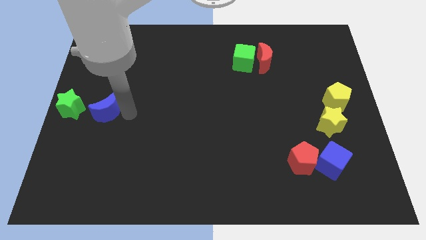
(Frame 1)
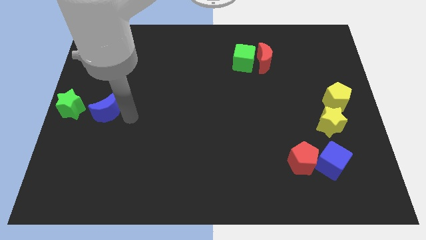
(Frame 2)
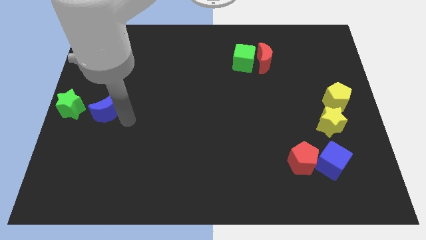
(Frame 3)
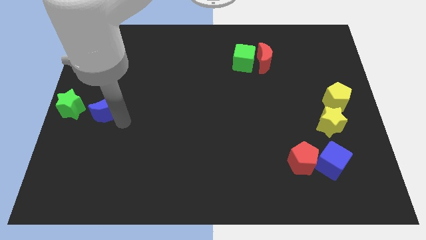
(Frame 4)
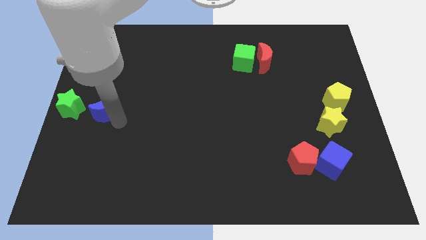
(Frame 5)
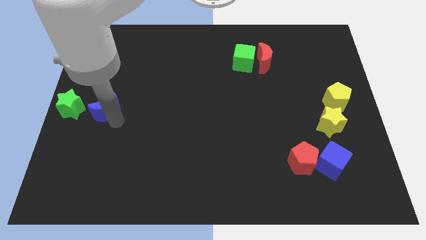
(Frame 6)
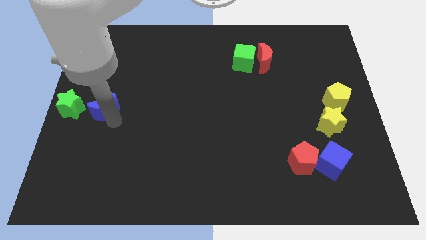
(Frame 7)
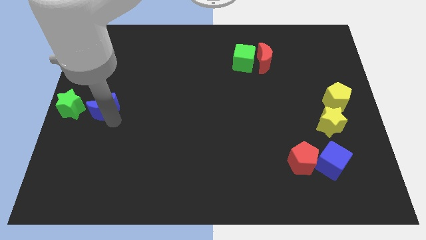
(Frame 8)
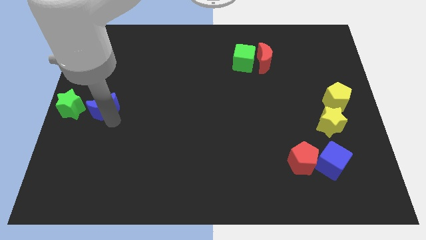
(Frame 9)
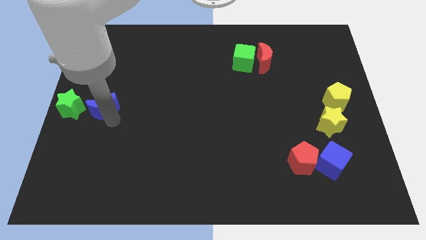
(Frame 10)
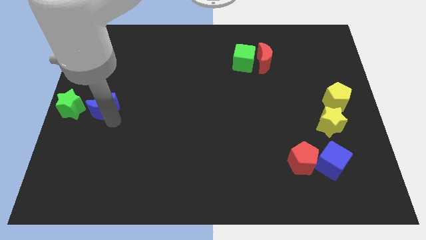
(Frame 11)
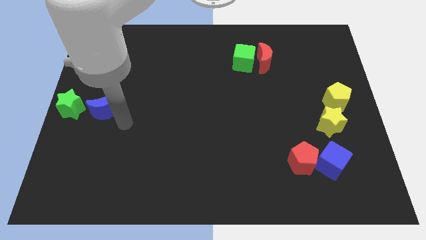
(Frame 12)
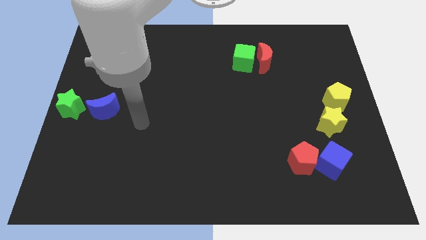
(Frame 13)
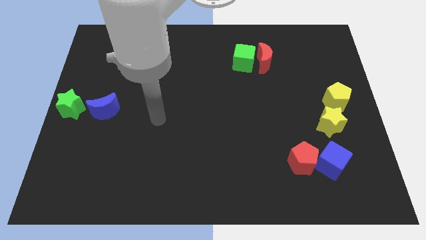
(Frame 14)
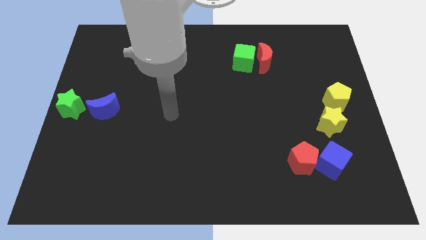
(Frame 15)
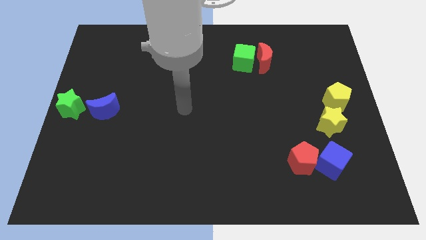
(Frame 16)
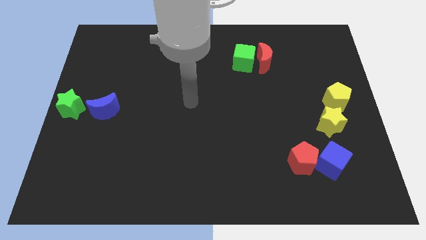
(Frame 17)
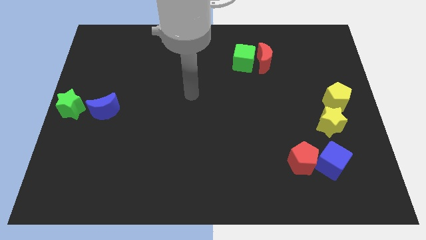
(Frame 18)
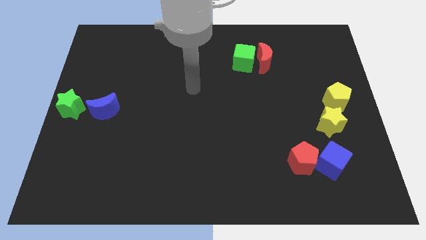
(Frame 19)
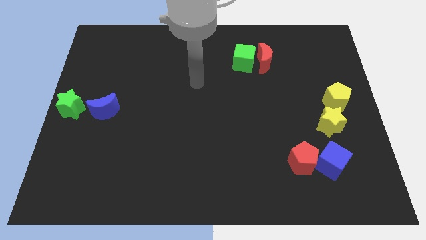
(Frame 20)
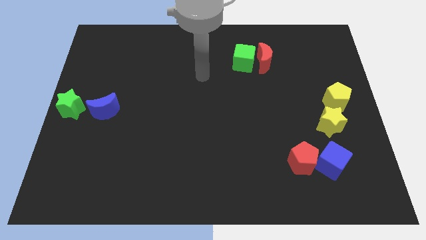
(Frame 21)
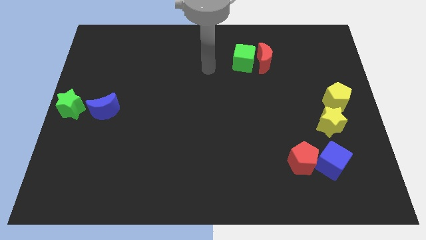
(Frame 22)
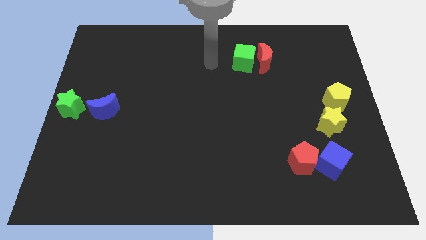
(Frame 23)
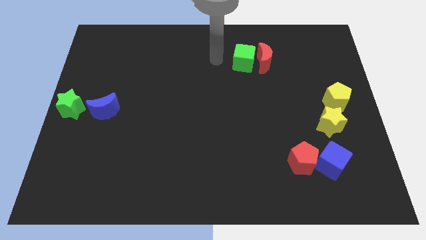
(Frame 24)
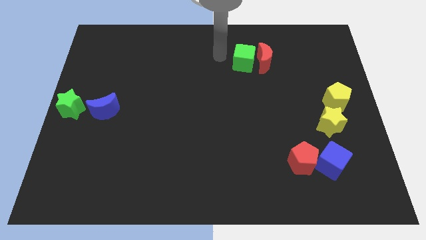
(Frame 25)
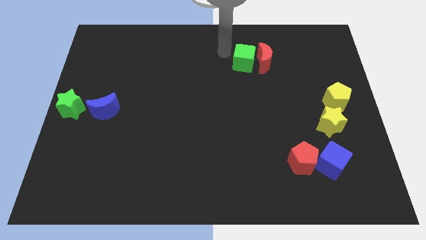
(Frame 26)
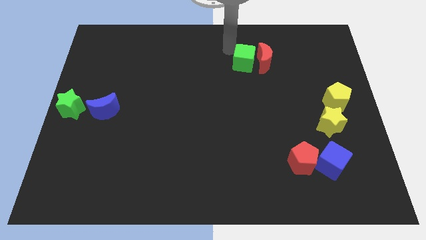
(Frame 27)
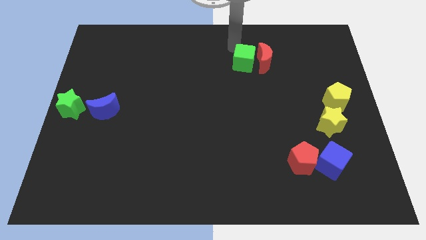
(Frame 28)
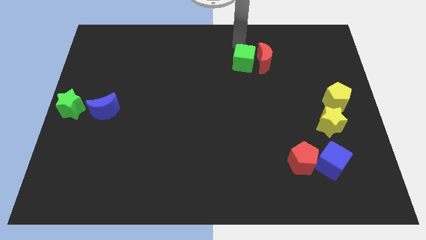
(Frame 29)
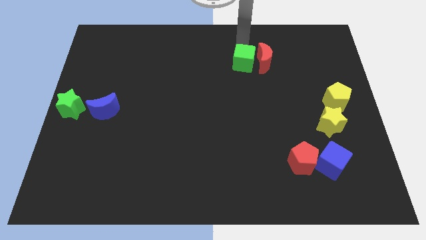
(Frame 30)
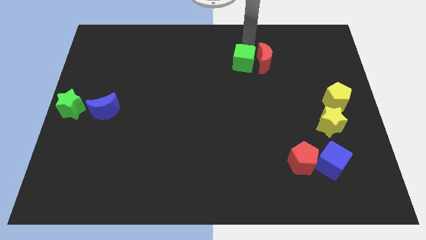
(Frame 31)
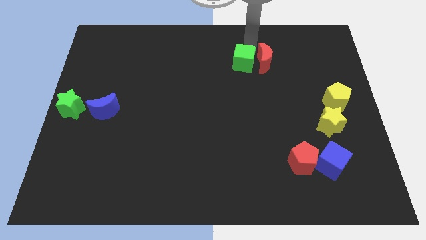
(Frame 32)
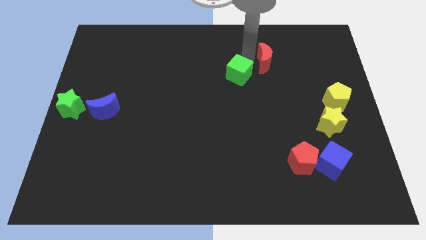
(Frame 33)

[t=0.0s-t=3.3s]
place the arm above the green cube

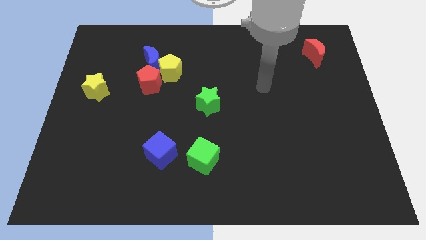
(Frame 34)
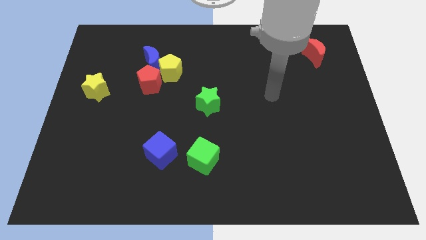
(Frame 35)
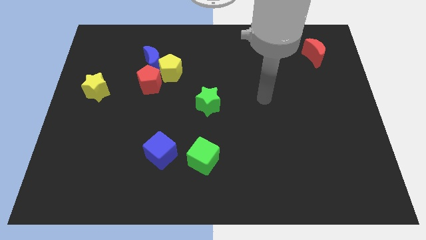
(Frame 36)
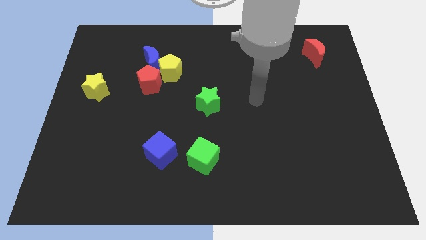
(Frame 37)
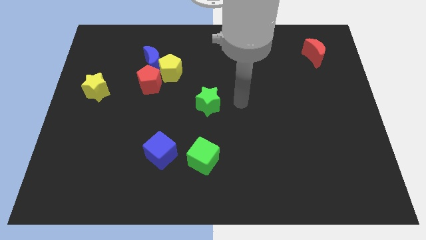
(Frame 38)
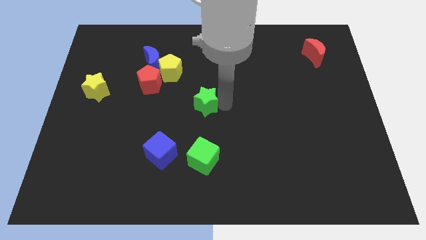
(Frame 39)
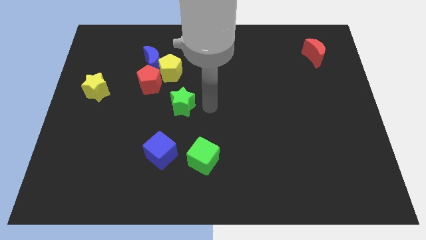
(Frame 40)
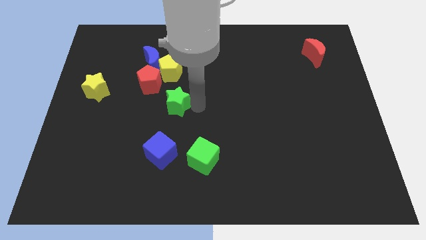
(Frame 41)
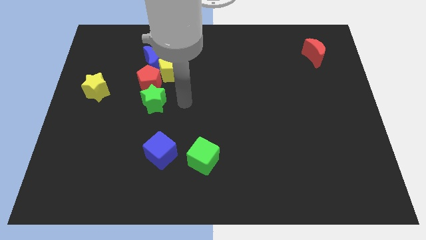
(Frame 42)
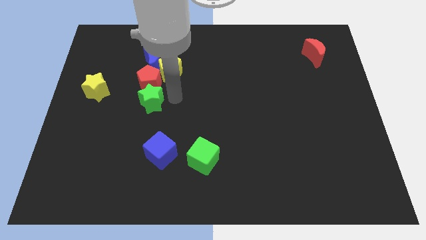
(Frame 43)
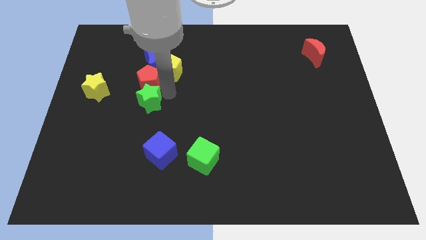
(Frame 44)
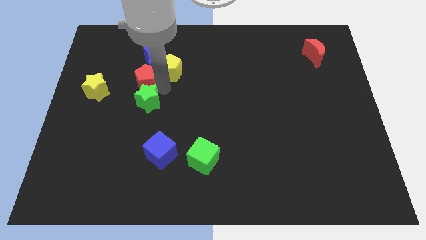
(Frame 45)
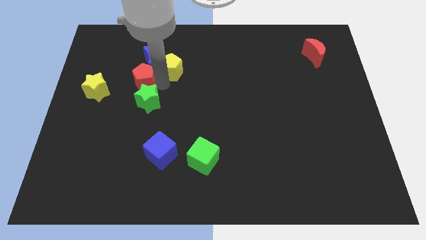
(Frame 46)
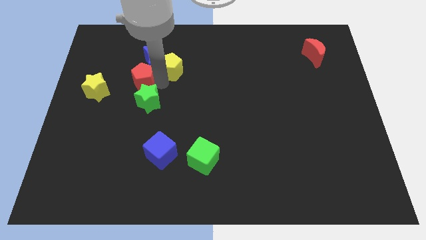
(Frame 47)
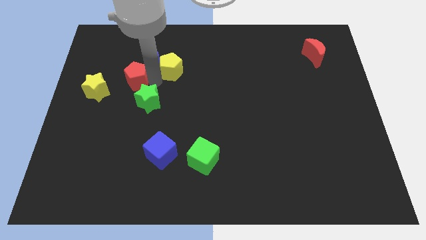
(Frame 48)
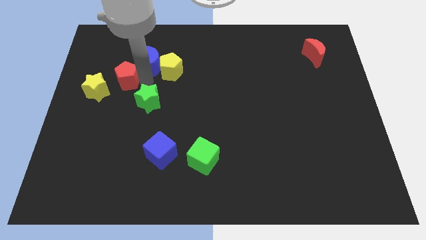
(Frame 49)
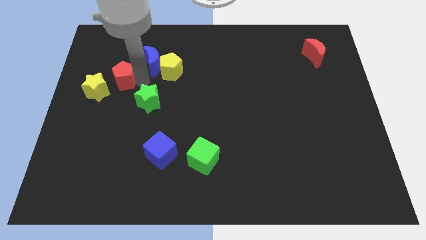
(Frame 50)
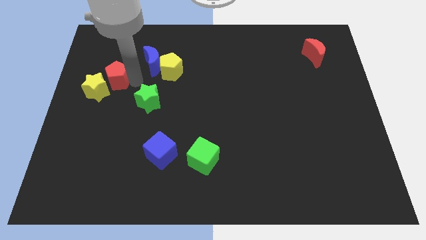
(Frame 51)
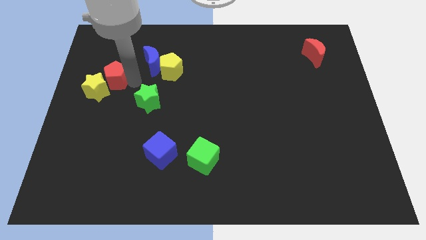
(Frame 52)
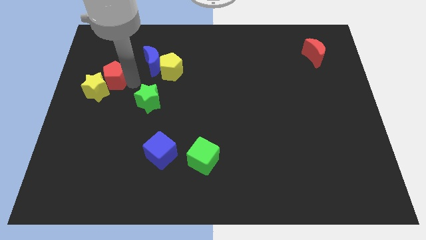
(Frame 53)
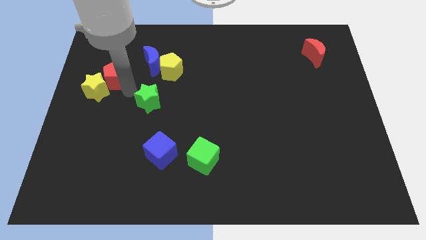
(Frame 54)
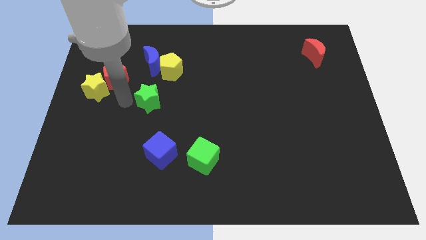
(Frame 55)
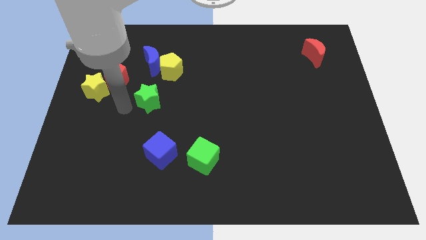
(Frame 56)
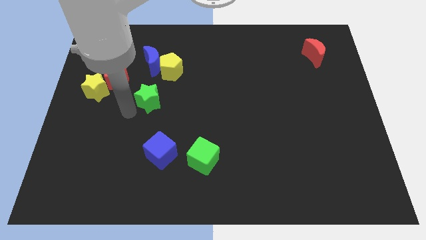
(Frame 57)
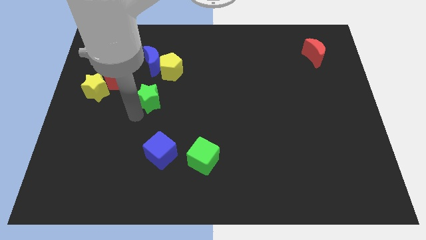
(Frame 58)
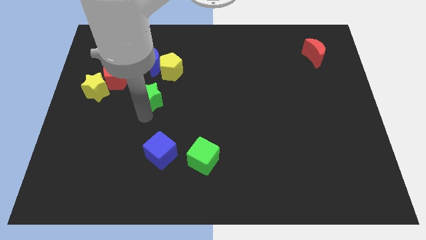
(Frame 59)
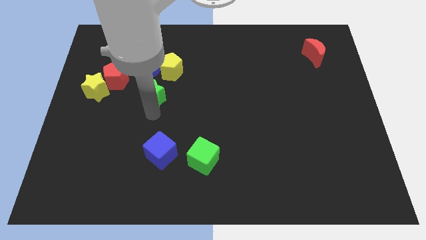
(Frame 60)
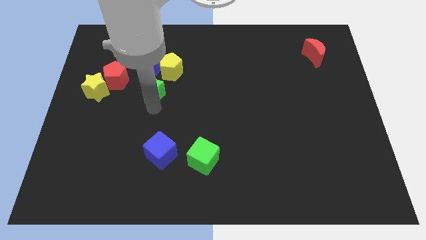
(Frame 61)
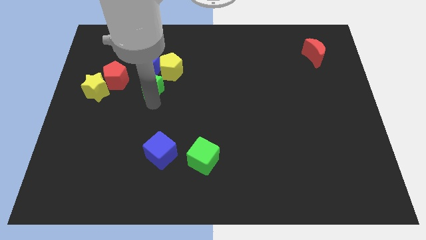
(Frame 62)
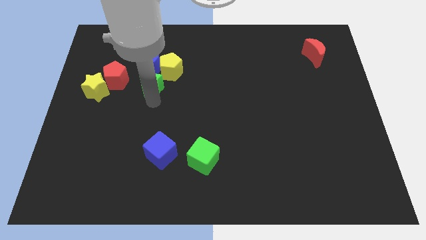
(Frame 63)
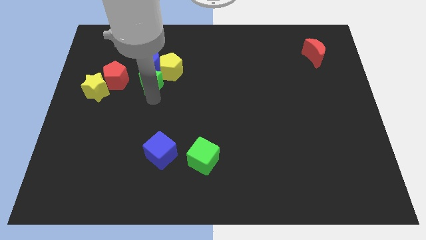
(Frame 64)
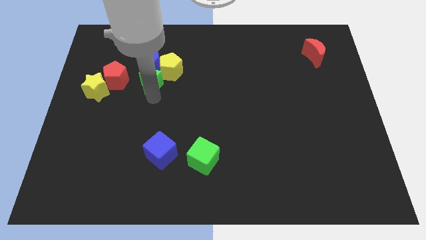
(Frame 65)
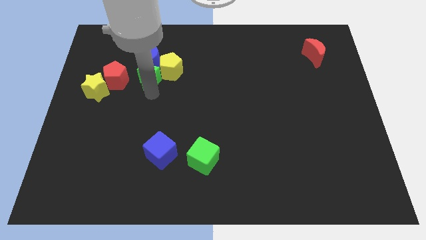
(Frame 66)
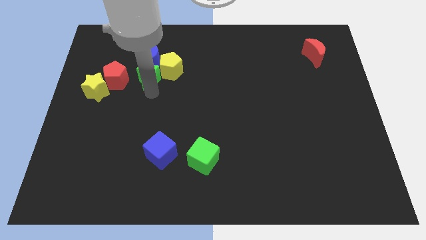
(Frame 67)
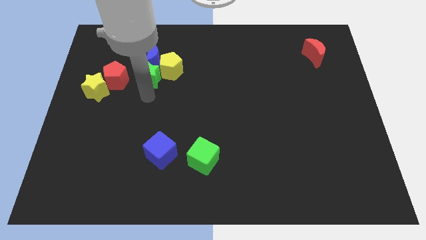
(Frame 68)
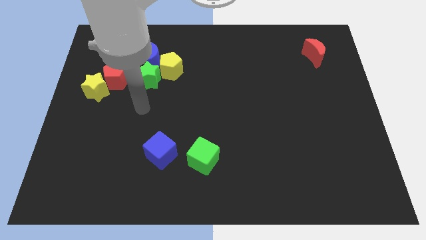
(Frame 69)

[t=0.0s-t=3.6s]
move the green star into the group of blocks

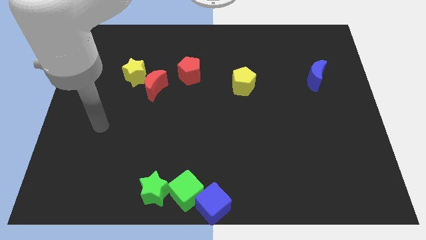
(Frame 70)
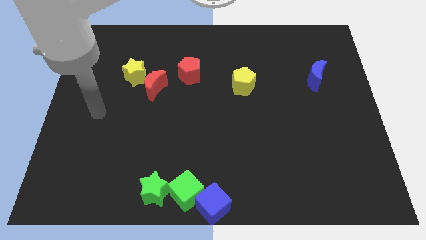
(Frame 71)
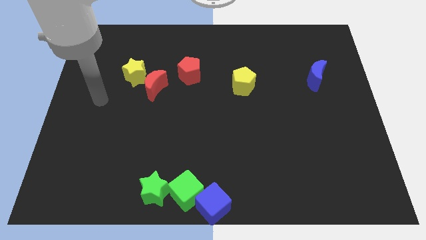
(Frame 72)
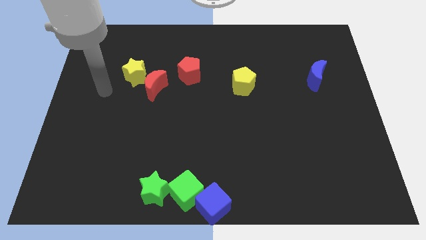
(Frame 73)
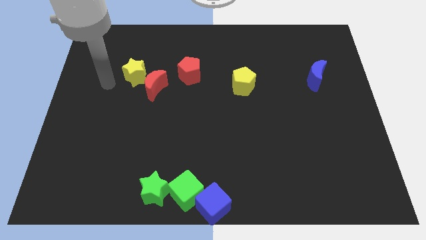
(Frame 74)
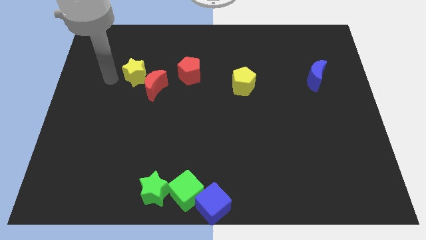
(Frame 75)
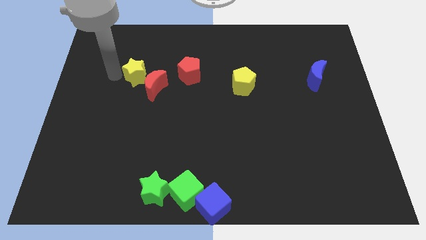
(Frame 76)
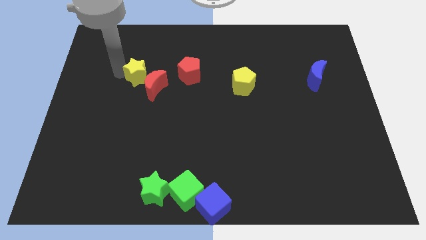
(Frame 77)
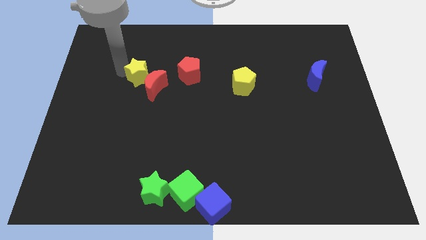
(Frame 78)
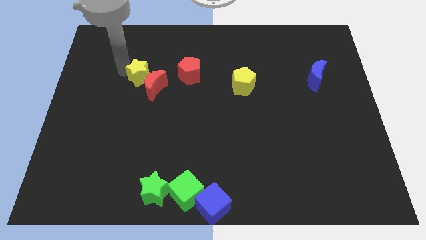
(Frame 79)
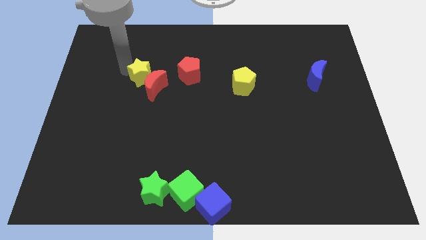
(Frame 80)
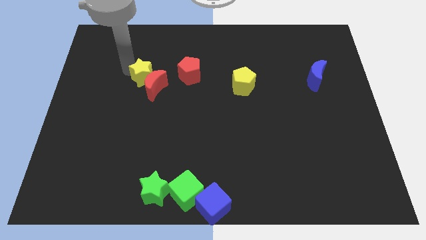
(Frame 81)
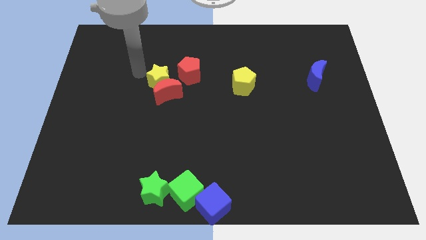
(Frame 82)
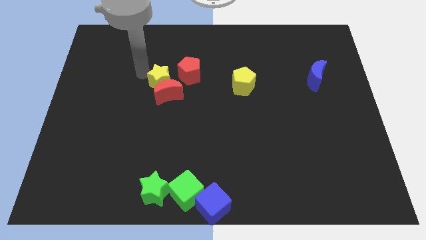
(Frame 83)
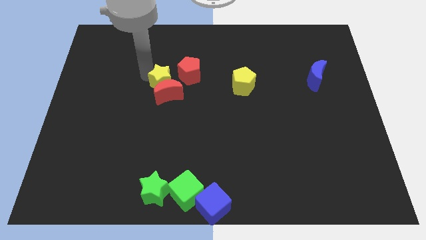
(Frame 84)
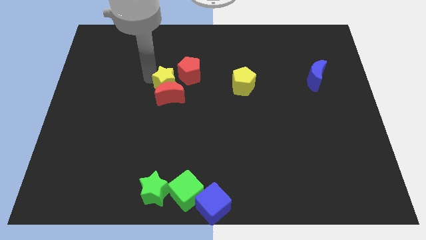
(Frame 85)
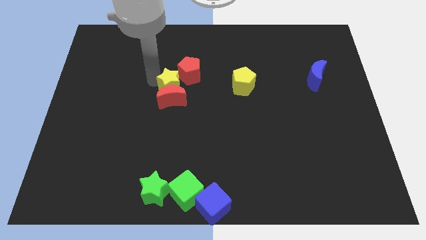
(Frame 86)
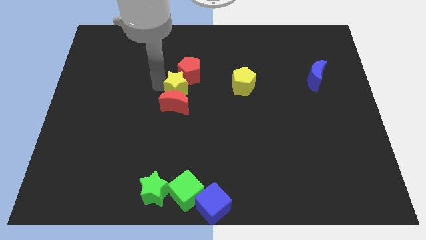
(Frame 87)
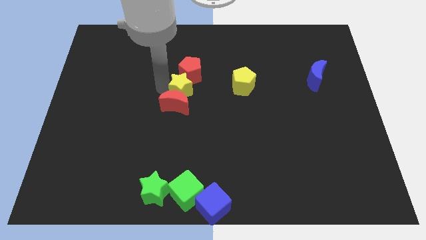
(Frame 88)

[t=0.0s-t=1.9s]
place the yellow star in between the red pentagon and red crescent

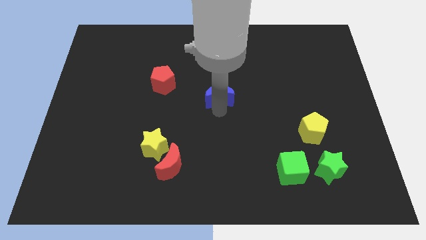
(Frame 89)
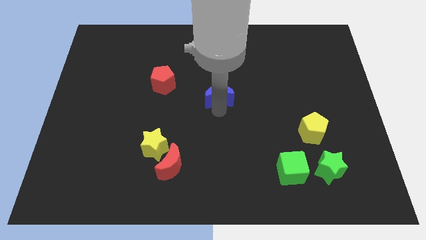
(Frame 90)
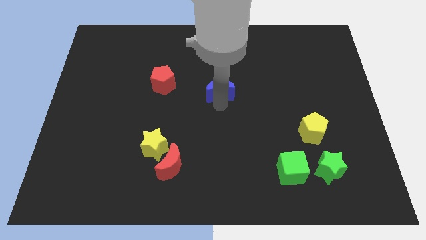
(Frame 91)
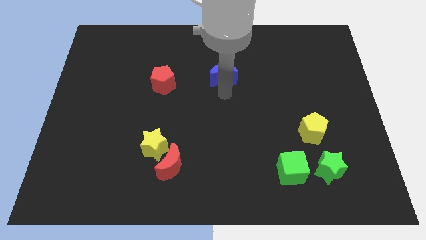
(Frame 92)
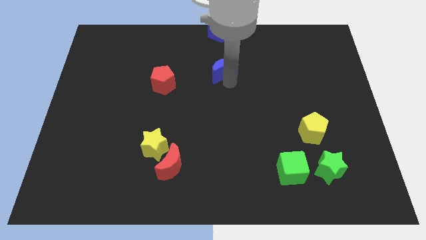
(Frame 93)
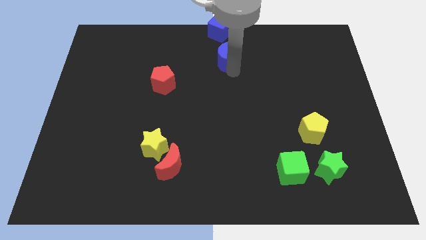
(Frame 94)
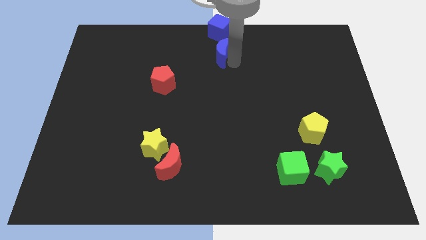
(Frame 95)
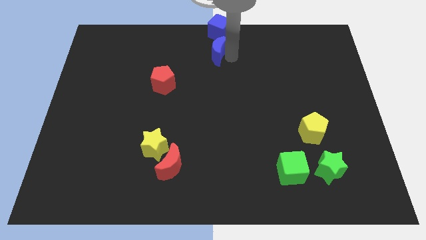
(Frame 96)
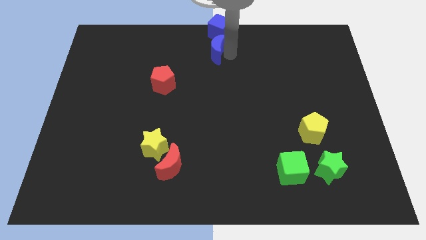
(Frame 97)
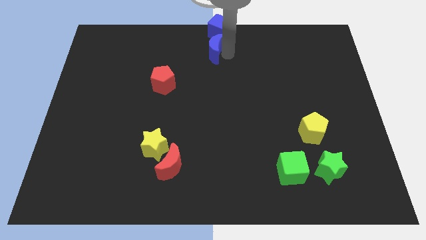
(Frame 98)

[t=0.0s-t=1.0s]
move the blue crescent to the bottom of the blue cube
